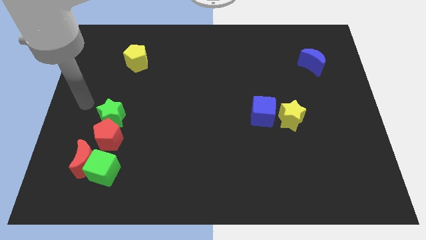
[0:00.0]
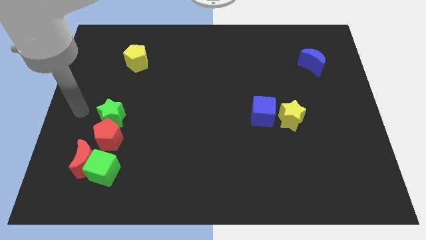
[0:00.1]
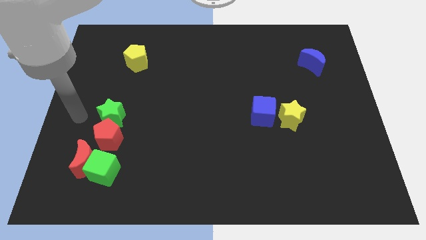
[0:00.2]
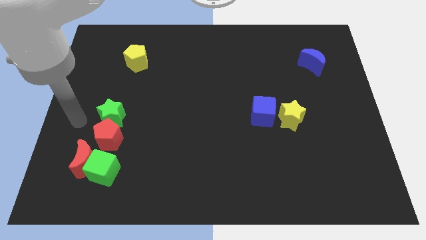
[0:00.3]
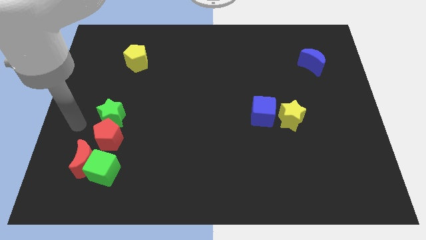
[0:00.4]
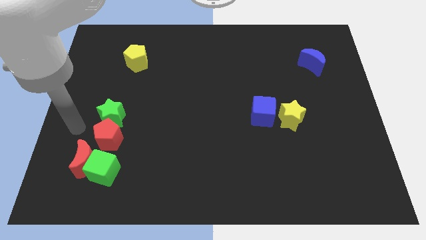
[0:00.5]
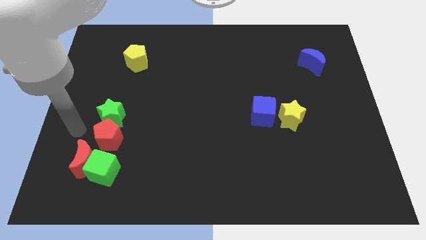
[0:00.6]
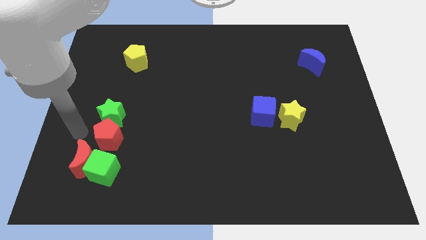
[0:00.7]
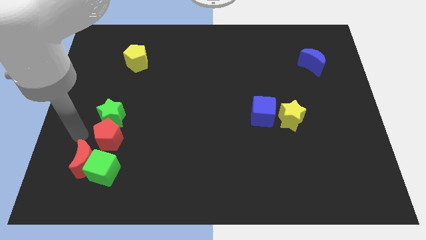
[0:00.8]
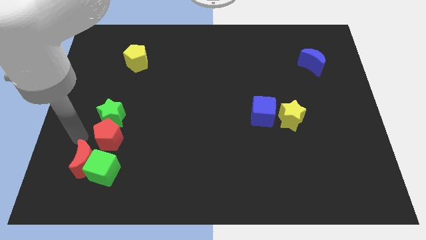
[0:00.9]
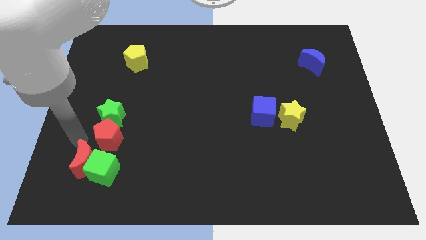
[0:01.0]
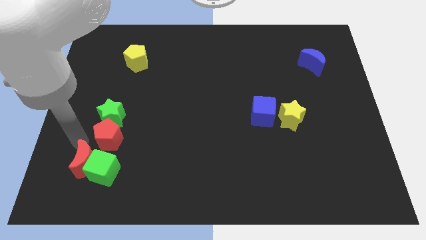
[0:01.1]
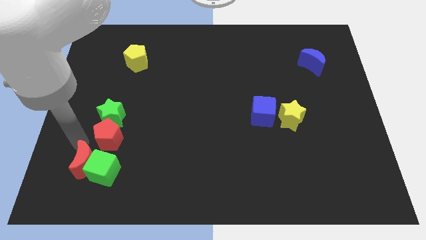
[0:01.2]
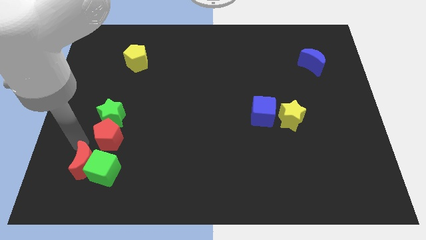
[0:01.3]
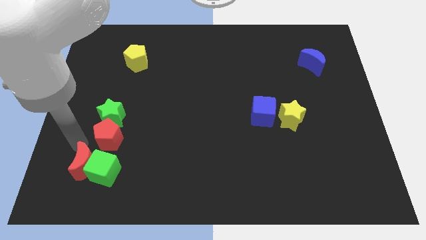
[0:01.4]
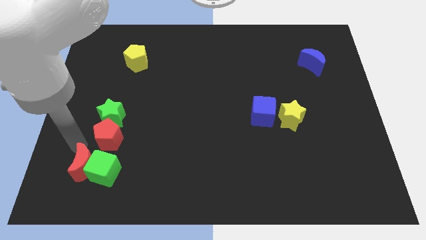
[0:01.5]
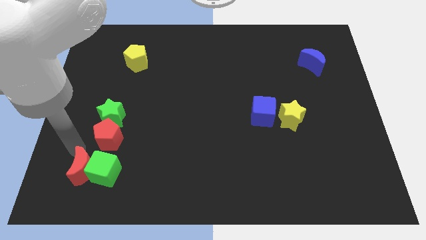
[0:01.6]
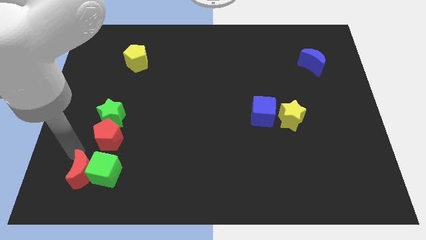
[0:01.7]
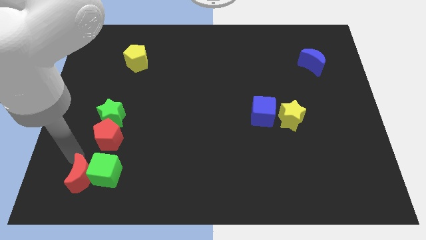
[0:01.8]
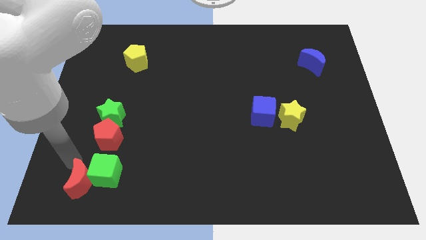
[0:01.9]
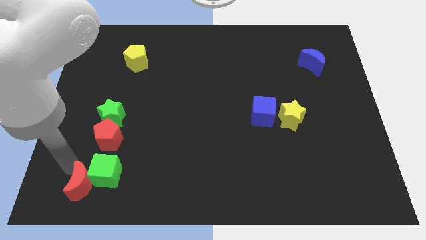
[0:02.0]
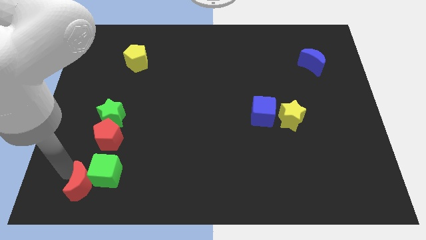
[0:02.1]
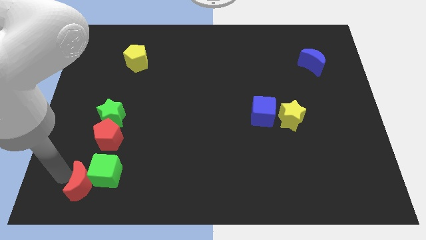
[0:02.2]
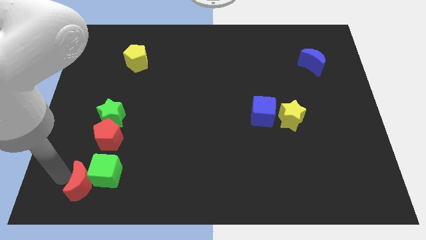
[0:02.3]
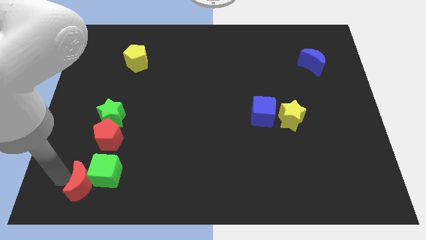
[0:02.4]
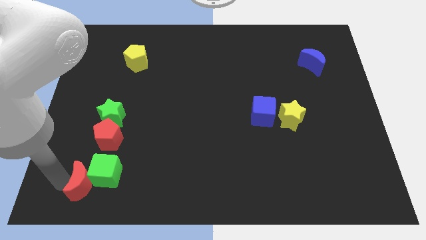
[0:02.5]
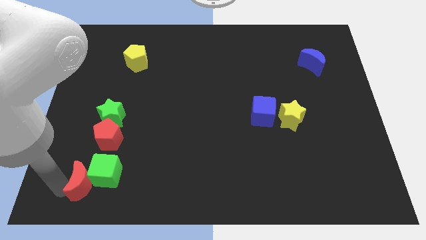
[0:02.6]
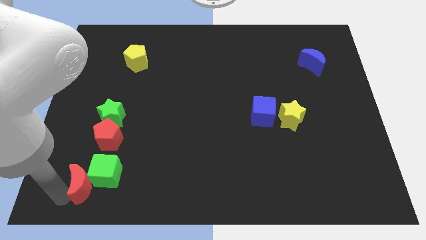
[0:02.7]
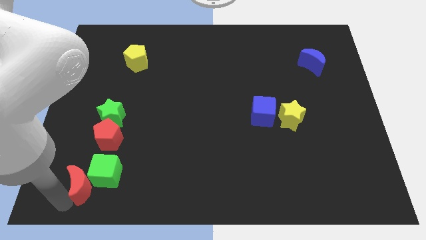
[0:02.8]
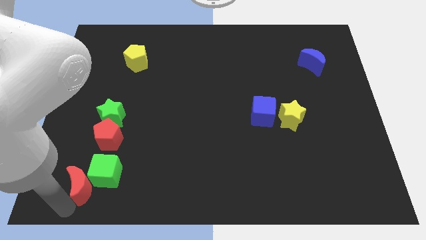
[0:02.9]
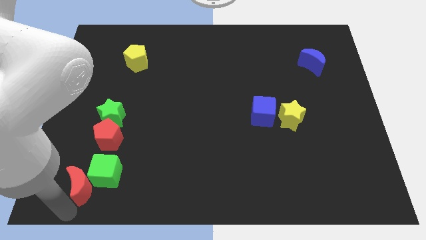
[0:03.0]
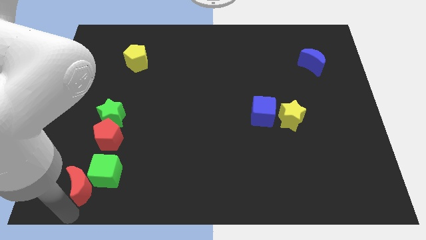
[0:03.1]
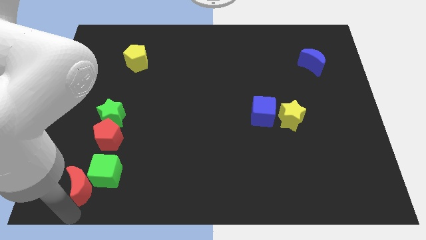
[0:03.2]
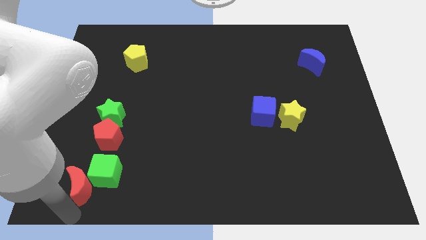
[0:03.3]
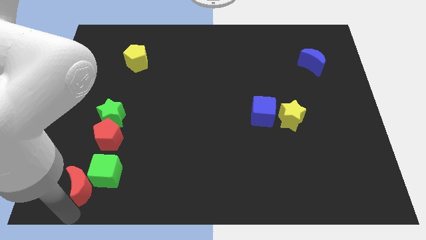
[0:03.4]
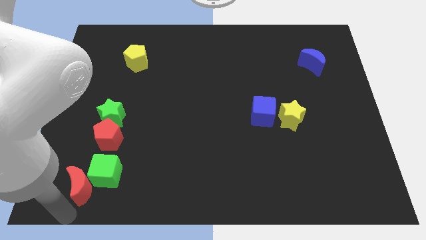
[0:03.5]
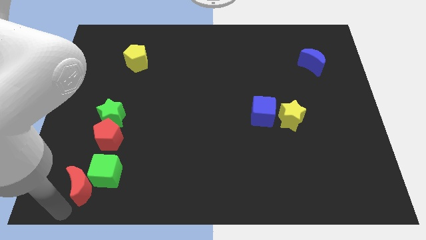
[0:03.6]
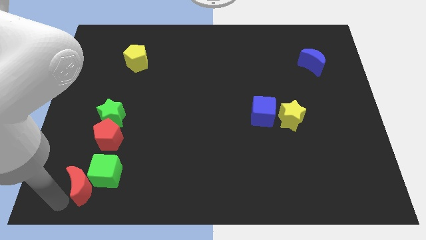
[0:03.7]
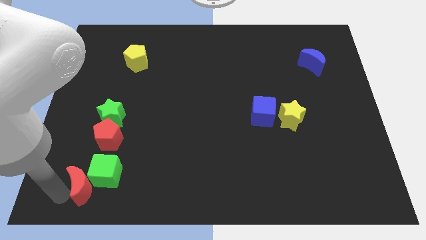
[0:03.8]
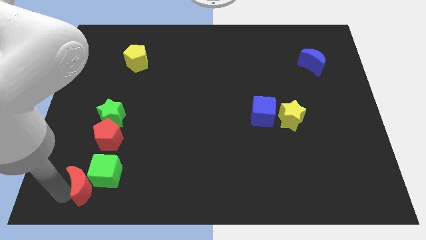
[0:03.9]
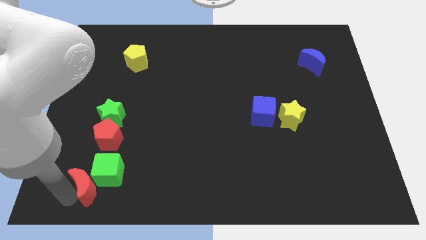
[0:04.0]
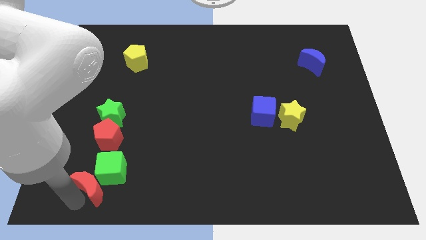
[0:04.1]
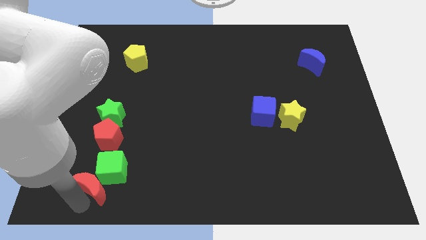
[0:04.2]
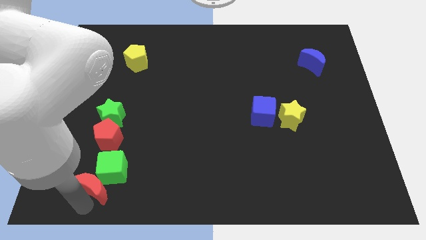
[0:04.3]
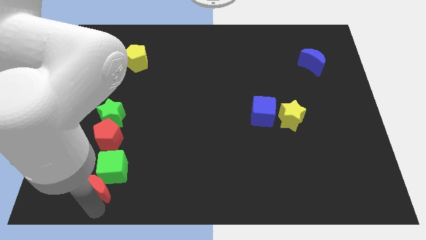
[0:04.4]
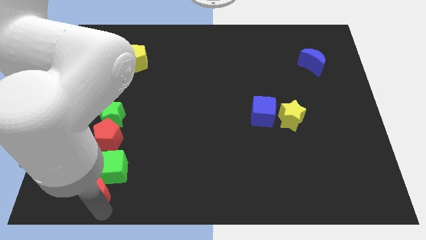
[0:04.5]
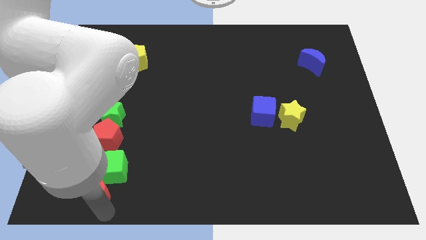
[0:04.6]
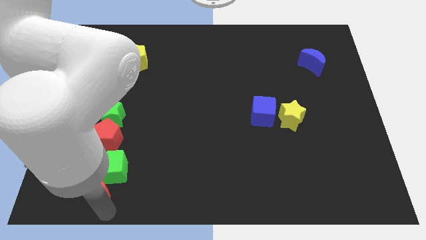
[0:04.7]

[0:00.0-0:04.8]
move the red moon to the bottom side of the green cube

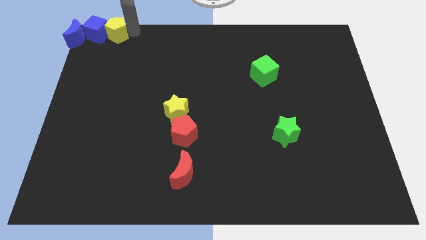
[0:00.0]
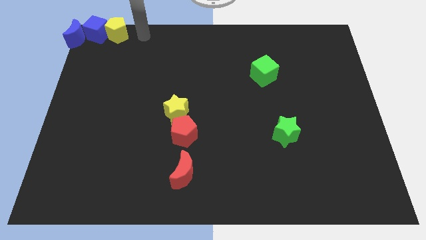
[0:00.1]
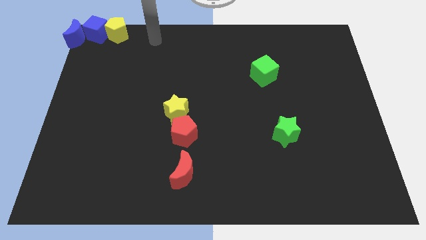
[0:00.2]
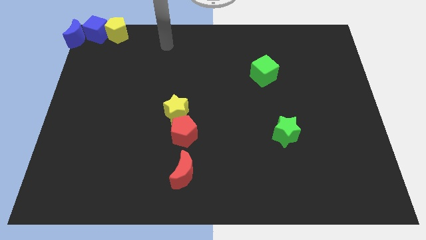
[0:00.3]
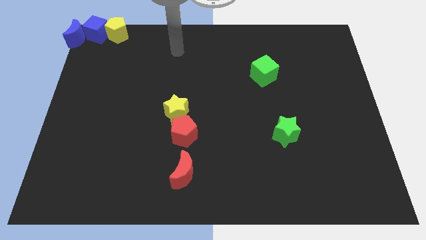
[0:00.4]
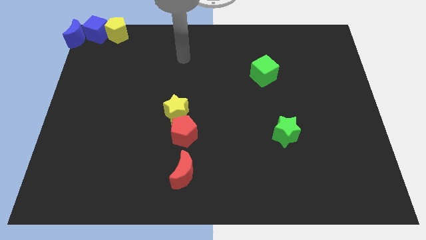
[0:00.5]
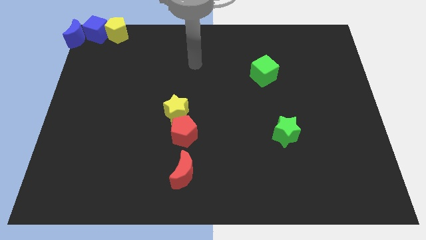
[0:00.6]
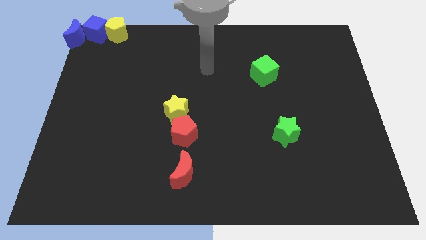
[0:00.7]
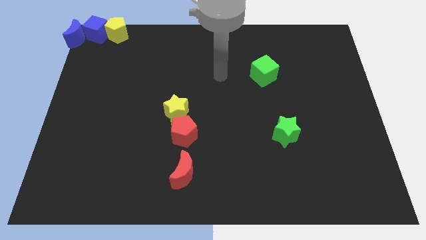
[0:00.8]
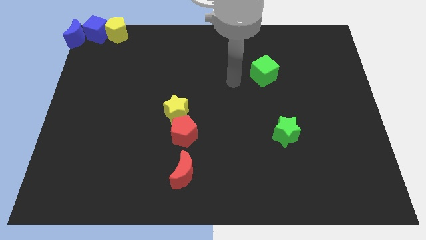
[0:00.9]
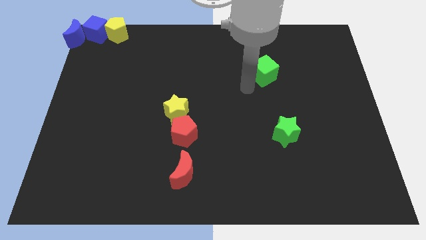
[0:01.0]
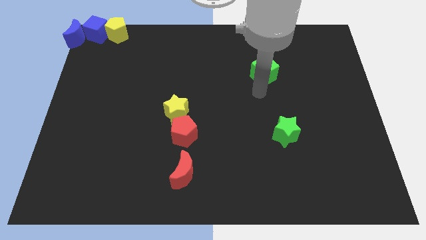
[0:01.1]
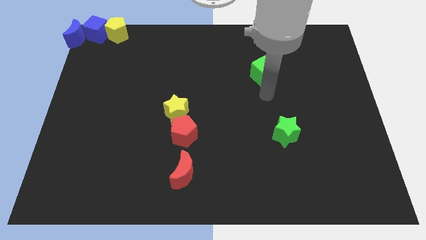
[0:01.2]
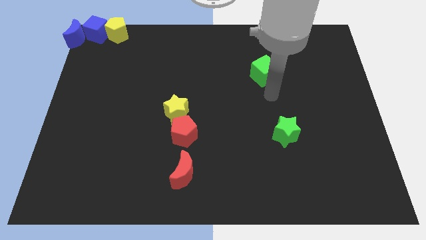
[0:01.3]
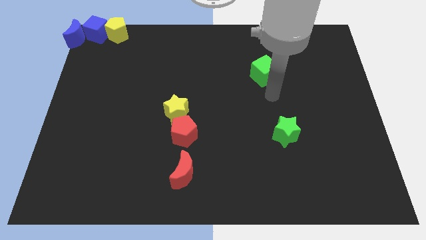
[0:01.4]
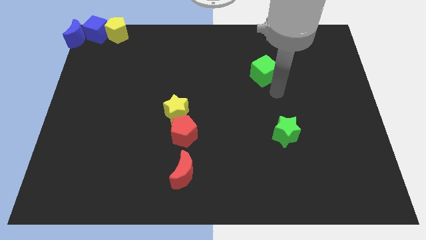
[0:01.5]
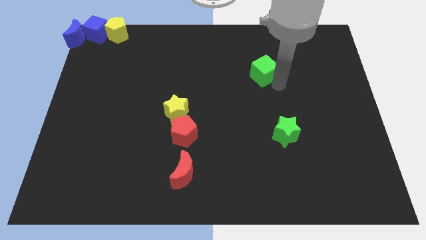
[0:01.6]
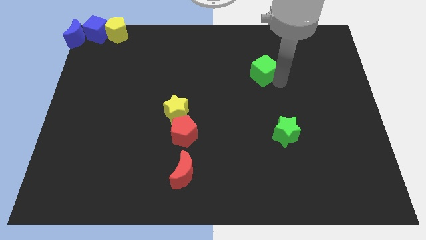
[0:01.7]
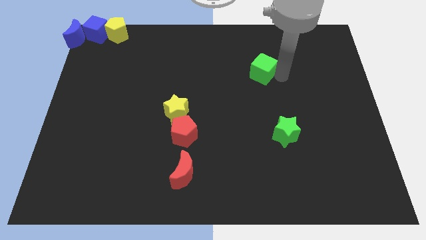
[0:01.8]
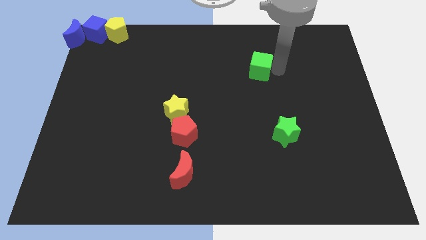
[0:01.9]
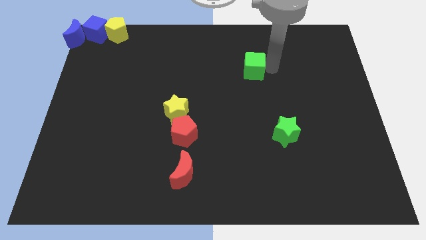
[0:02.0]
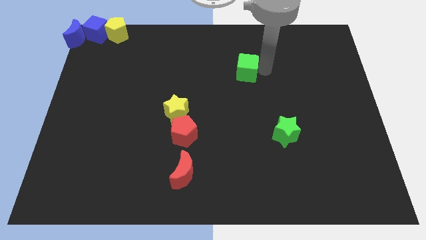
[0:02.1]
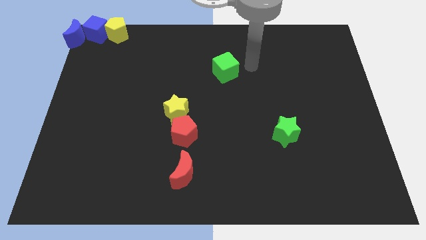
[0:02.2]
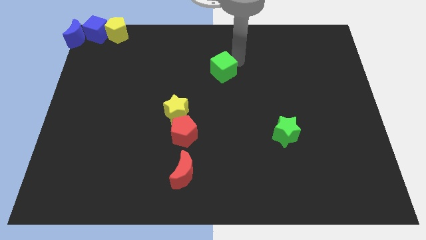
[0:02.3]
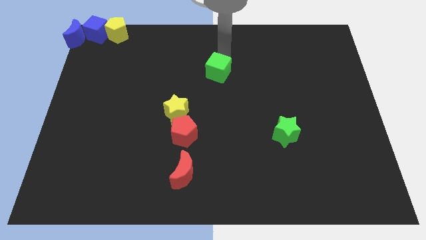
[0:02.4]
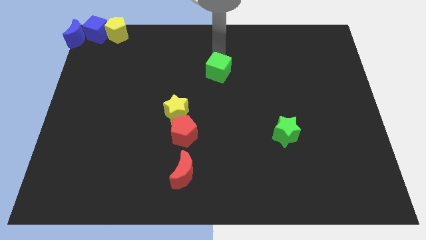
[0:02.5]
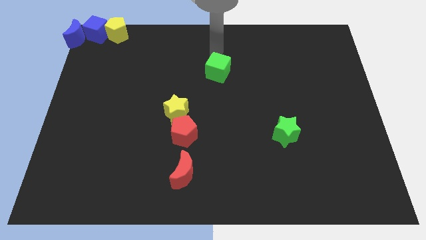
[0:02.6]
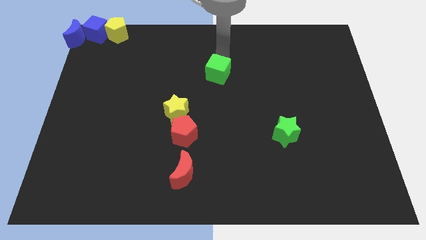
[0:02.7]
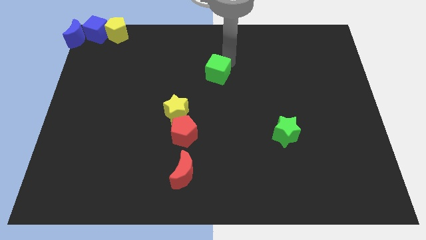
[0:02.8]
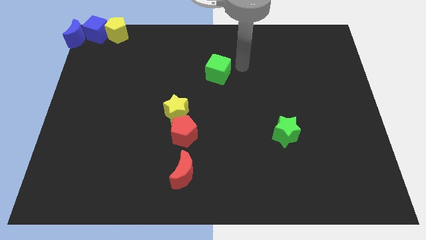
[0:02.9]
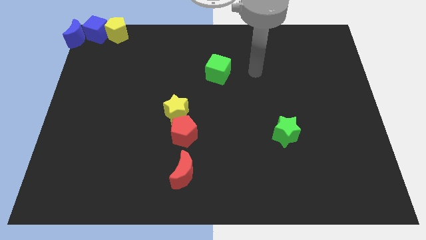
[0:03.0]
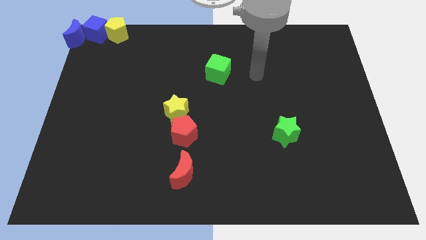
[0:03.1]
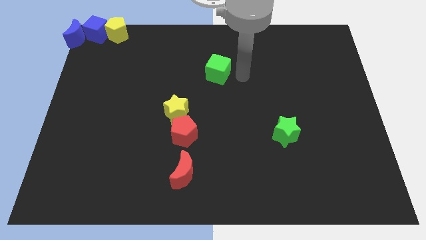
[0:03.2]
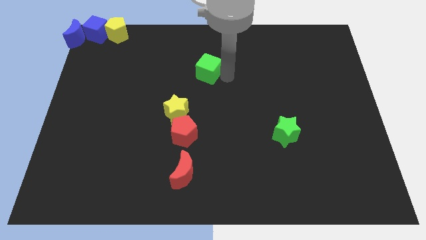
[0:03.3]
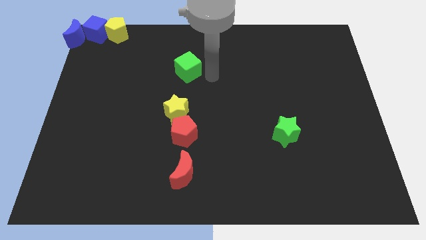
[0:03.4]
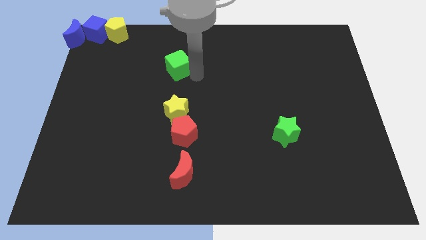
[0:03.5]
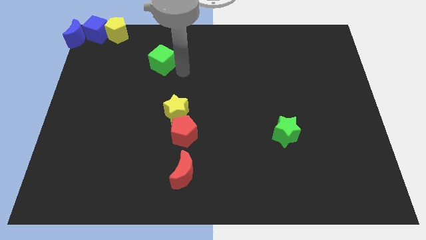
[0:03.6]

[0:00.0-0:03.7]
push the green cube towards the left side of the board

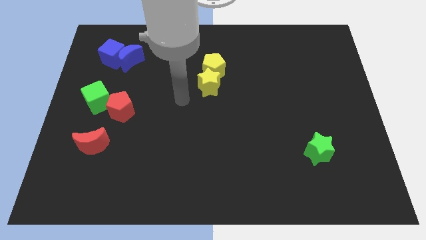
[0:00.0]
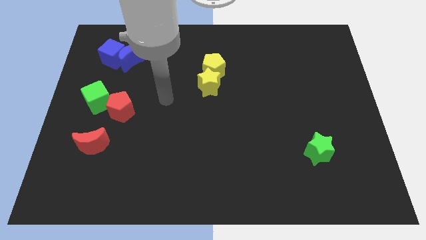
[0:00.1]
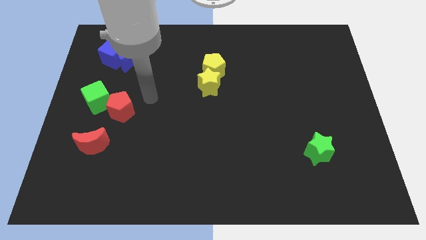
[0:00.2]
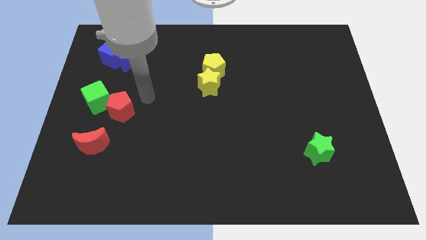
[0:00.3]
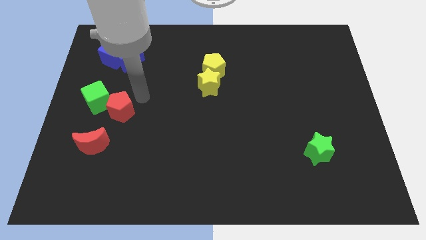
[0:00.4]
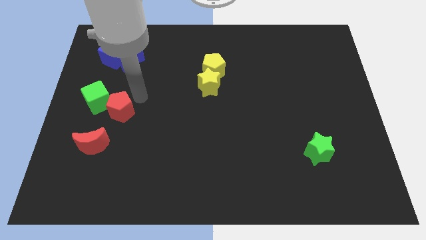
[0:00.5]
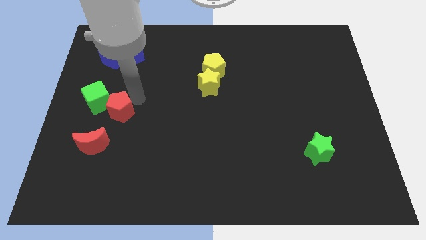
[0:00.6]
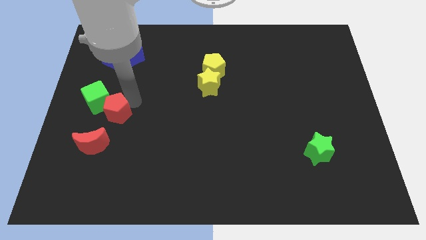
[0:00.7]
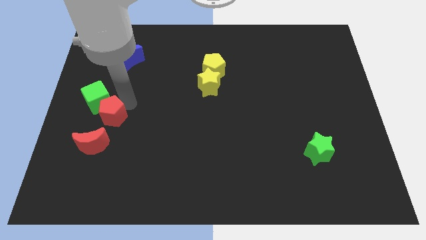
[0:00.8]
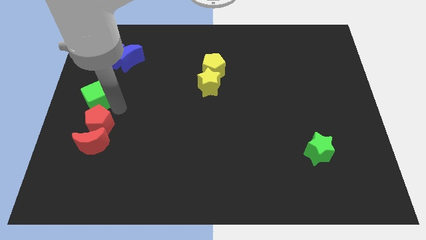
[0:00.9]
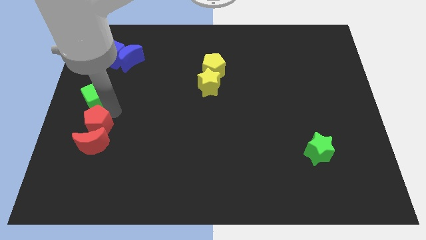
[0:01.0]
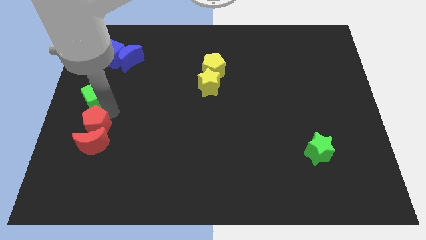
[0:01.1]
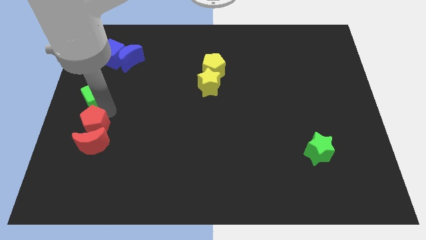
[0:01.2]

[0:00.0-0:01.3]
push the red pentagon to the top of red crescent
